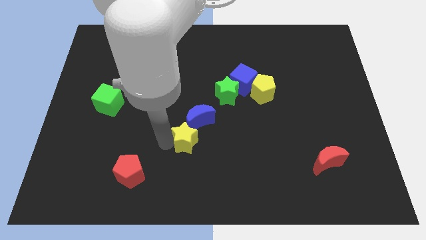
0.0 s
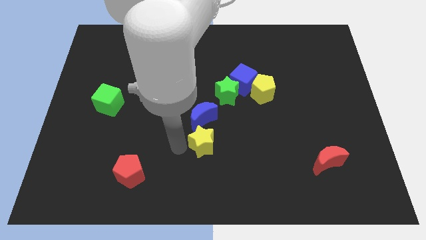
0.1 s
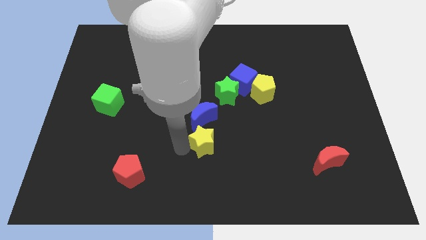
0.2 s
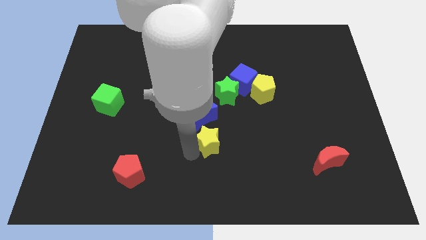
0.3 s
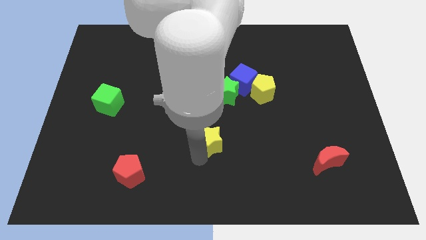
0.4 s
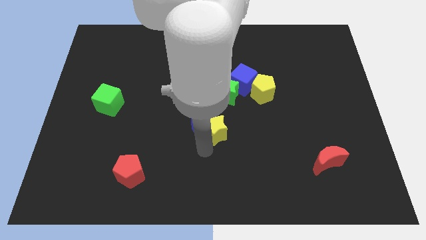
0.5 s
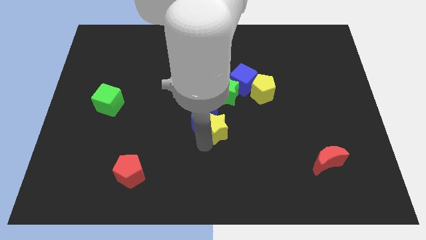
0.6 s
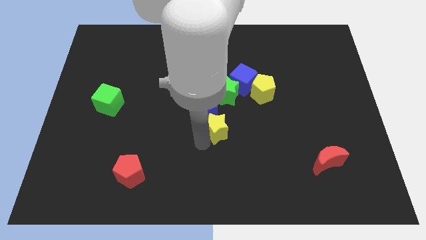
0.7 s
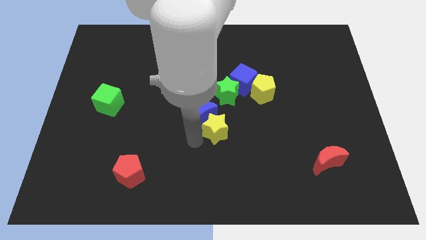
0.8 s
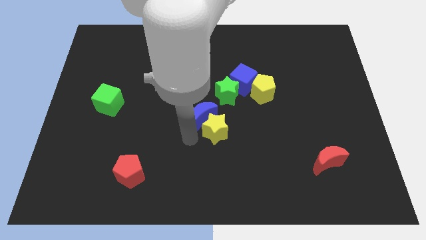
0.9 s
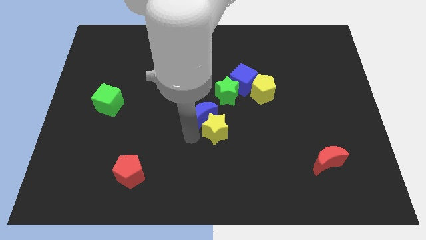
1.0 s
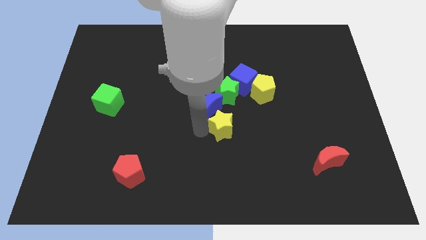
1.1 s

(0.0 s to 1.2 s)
move yellow star into blue moon

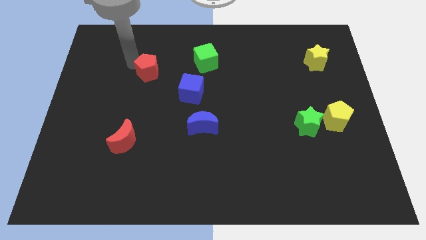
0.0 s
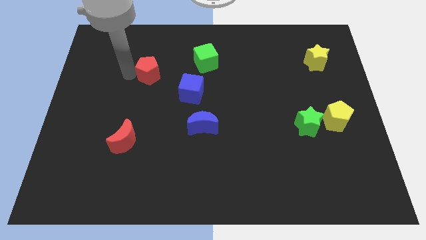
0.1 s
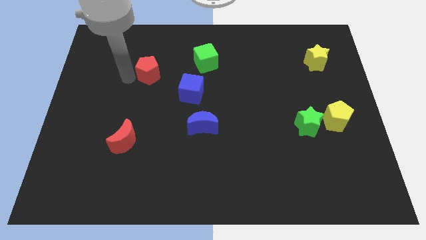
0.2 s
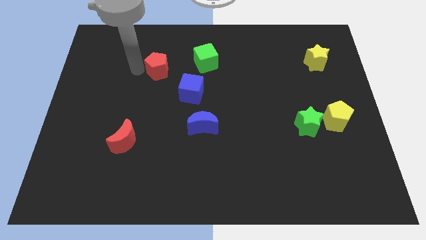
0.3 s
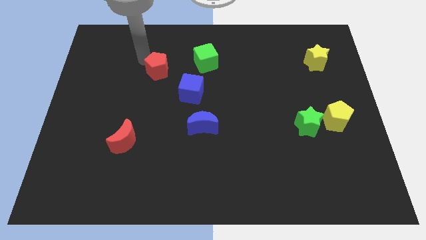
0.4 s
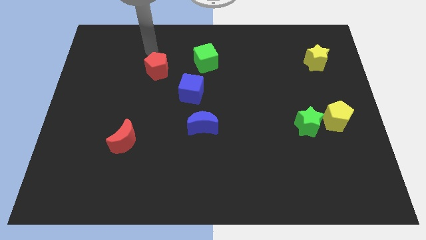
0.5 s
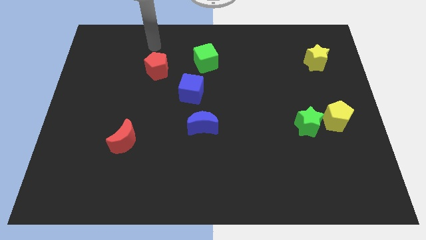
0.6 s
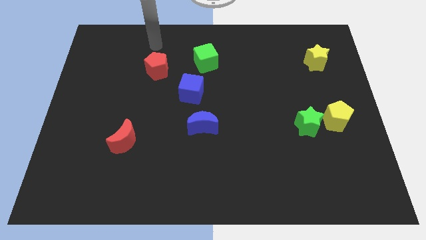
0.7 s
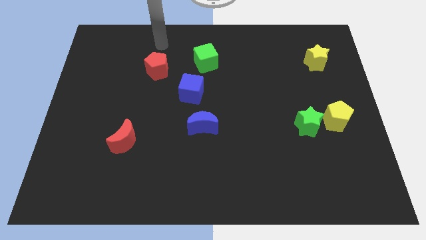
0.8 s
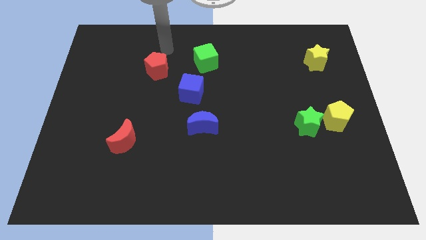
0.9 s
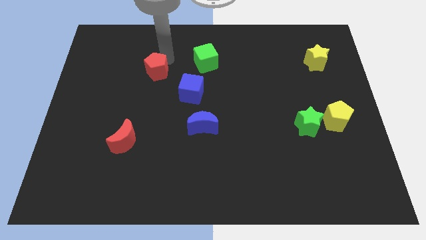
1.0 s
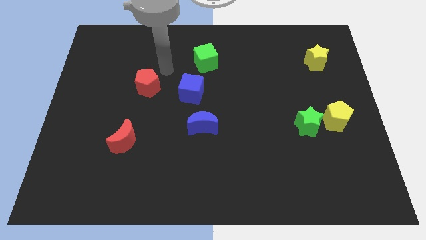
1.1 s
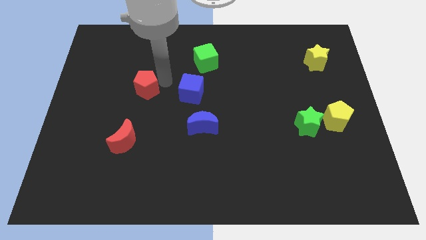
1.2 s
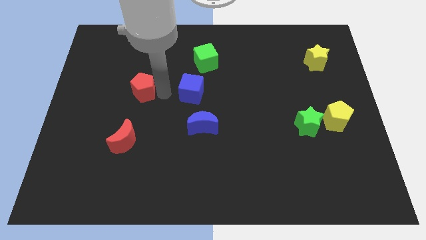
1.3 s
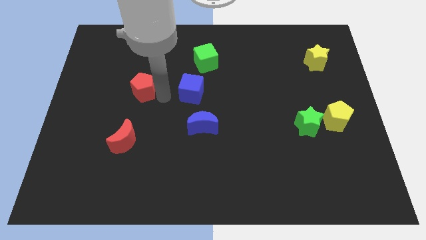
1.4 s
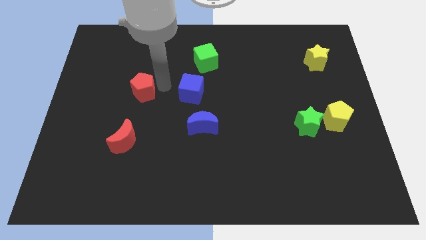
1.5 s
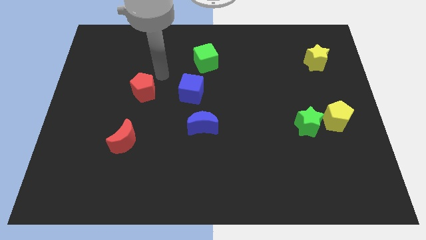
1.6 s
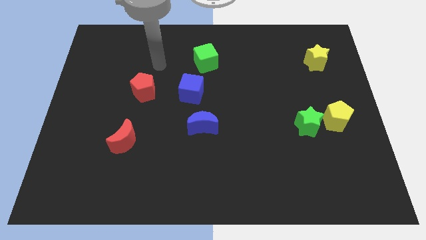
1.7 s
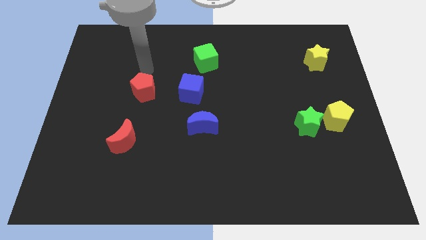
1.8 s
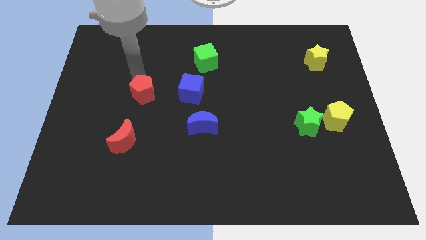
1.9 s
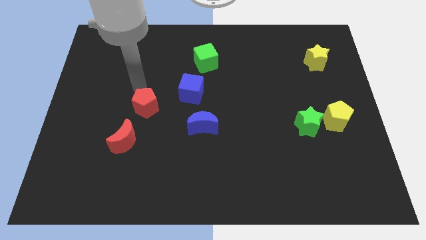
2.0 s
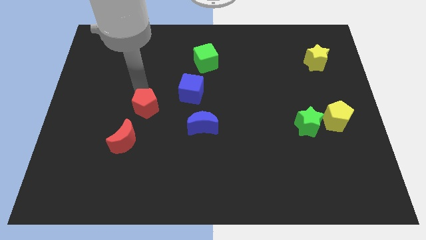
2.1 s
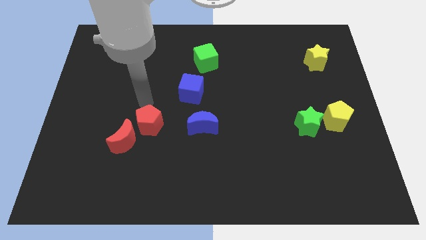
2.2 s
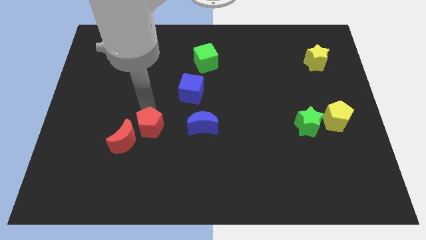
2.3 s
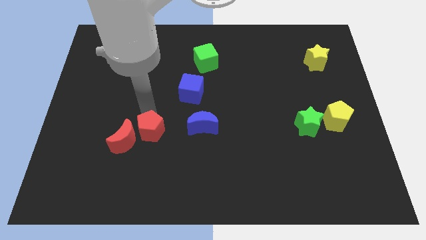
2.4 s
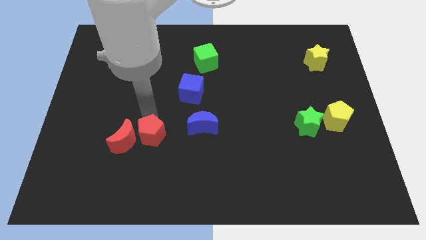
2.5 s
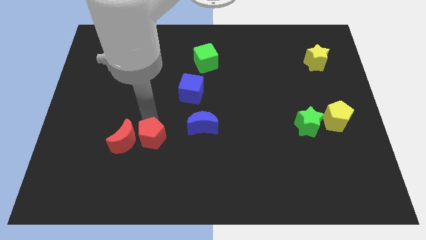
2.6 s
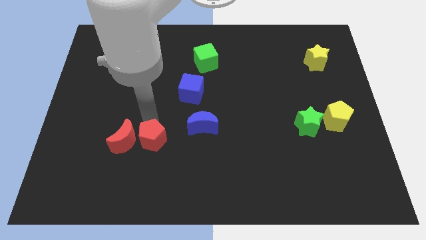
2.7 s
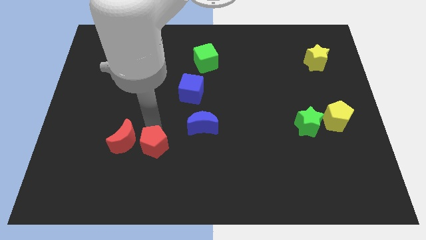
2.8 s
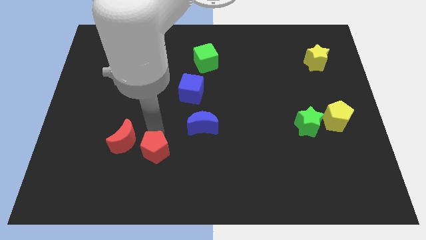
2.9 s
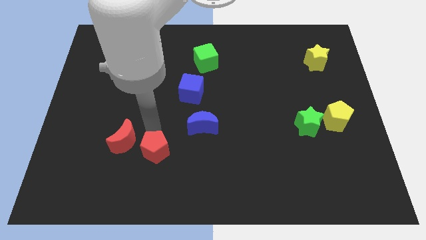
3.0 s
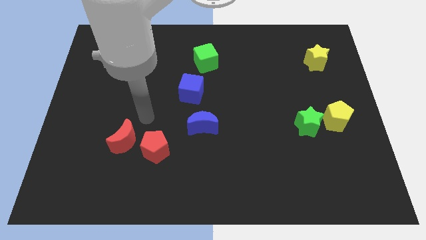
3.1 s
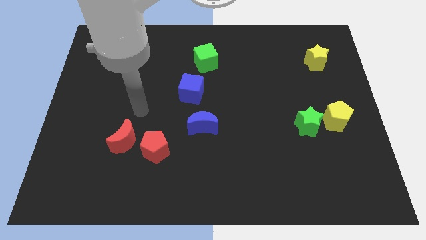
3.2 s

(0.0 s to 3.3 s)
move red pentagon to the bottom left

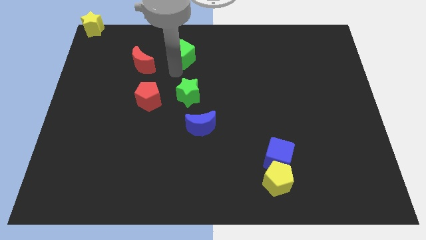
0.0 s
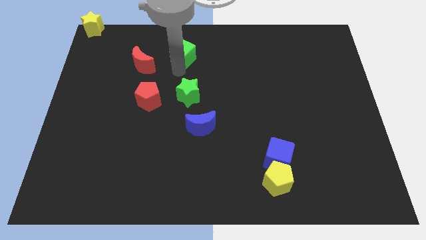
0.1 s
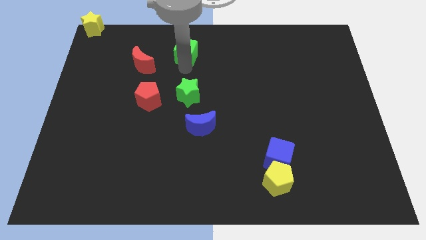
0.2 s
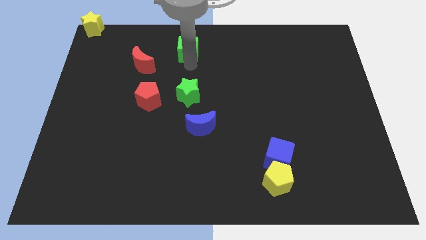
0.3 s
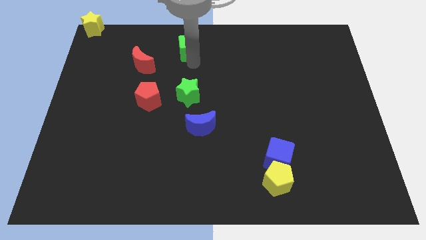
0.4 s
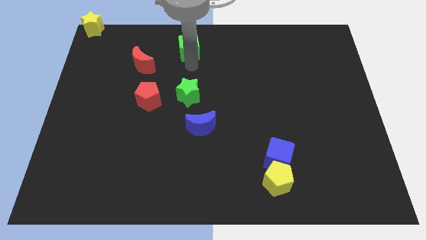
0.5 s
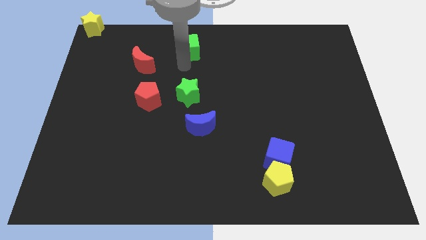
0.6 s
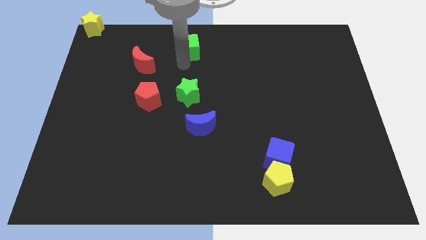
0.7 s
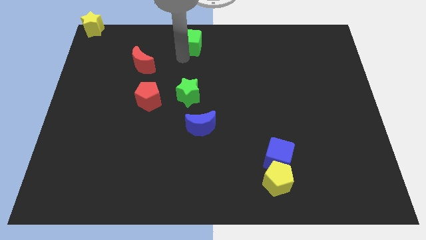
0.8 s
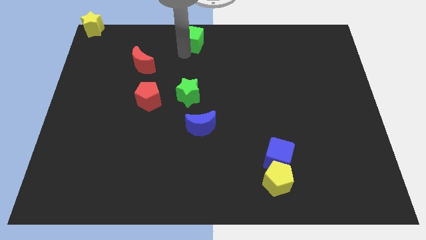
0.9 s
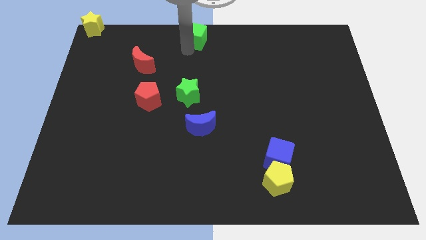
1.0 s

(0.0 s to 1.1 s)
push green cube towards top center

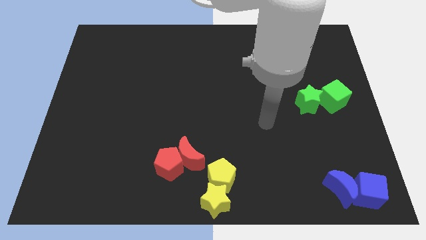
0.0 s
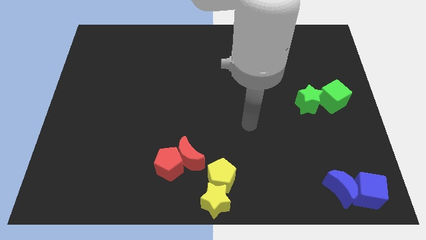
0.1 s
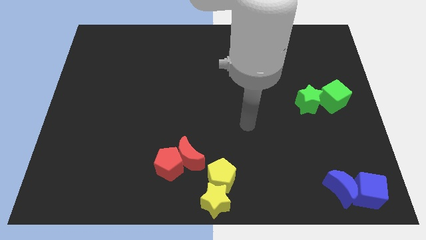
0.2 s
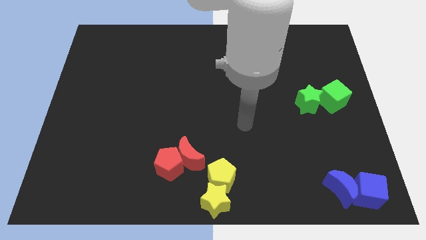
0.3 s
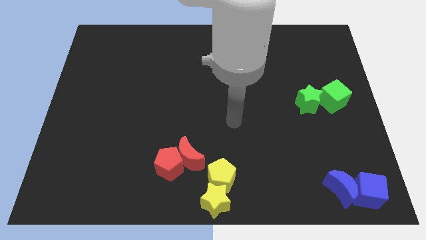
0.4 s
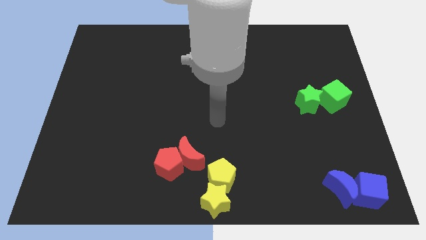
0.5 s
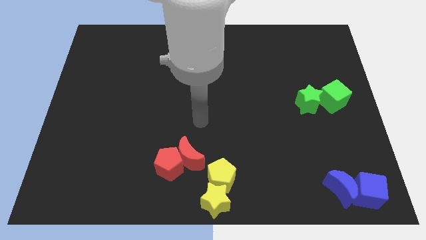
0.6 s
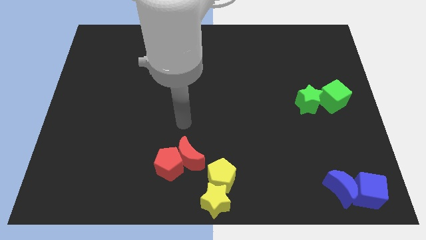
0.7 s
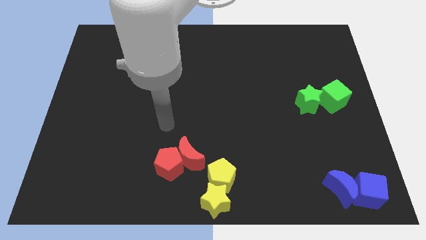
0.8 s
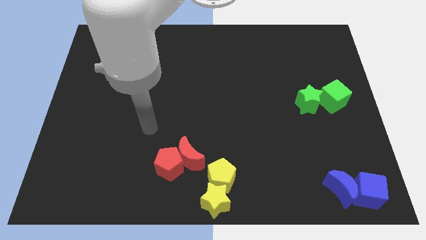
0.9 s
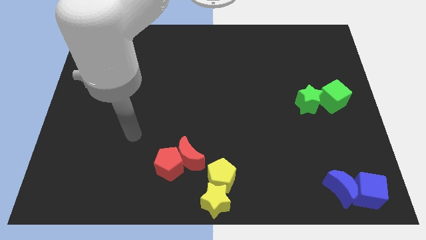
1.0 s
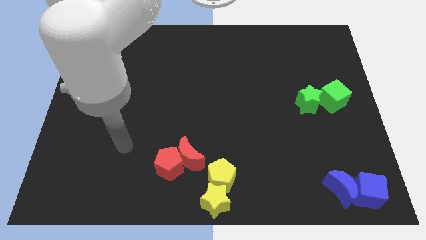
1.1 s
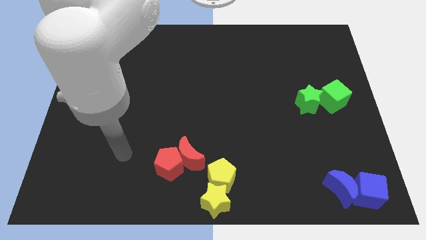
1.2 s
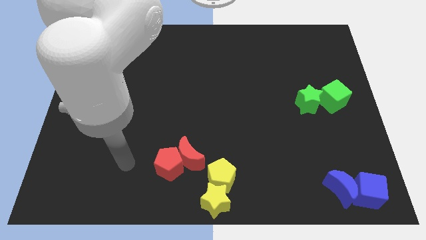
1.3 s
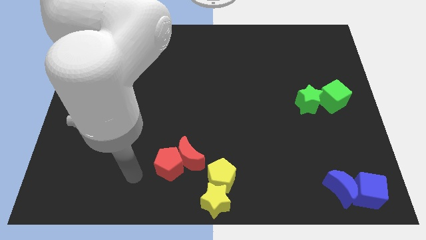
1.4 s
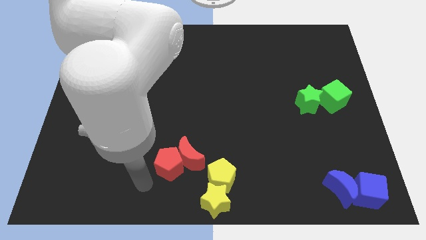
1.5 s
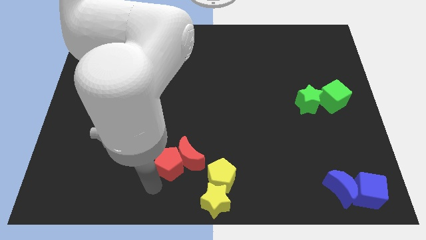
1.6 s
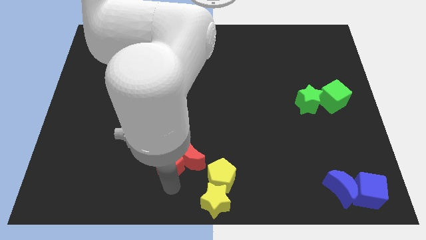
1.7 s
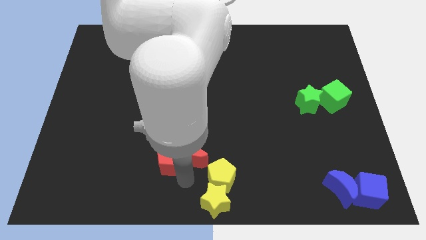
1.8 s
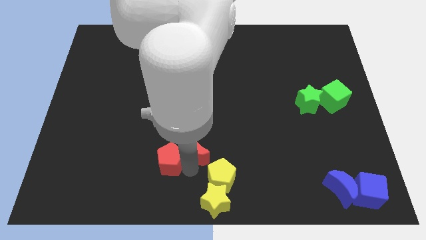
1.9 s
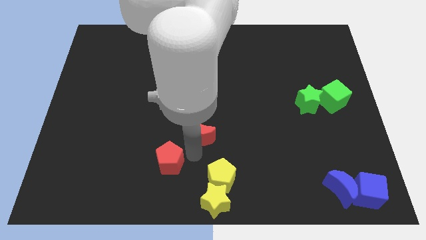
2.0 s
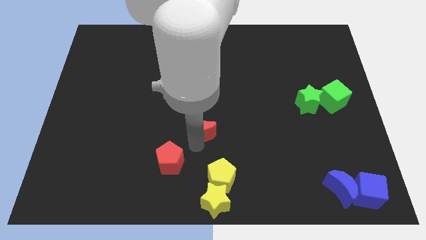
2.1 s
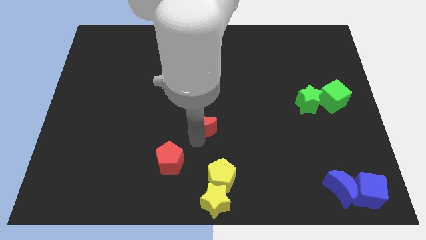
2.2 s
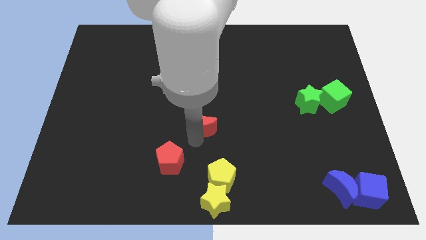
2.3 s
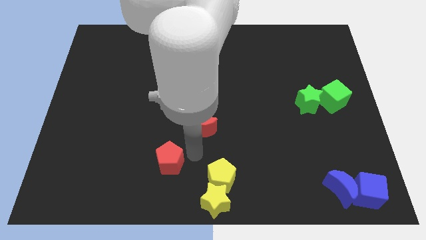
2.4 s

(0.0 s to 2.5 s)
separate the red moon from the red pentagon

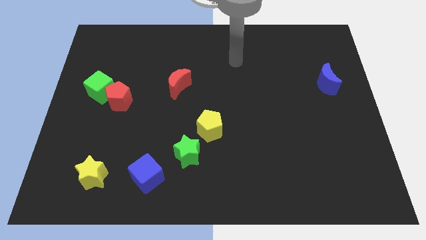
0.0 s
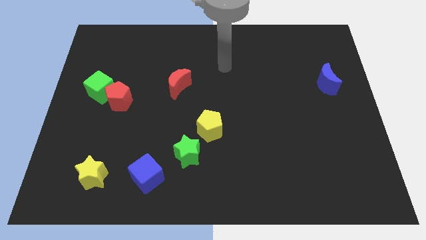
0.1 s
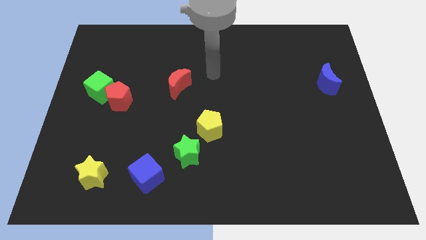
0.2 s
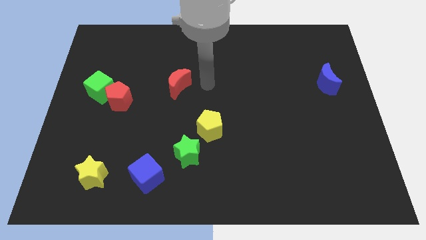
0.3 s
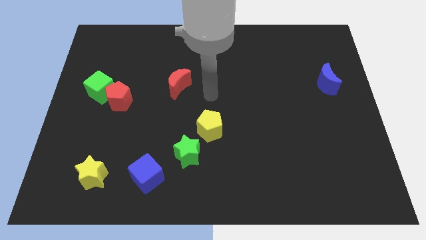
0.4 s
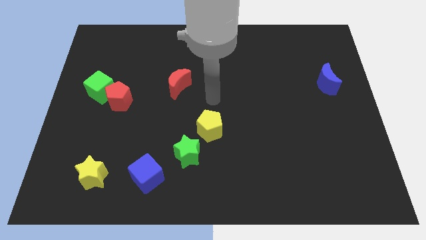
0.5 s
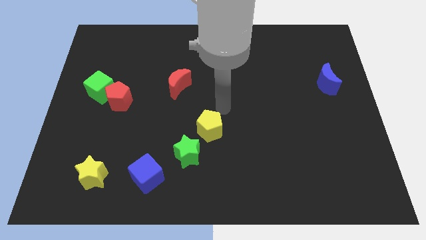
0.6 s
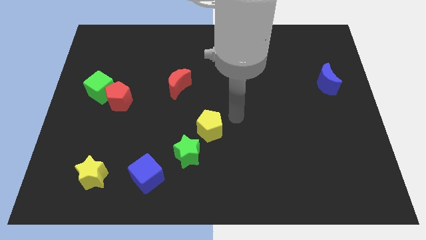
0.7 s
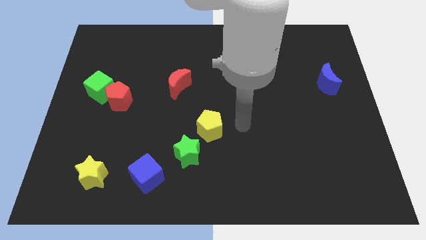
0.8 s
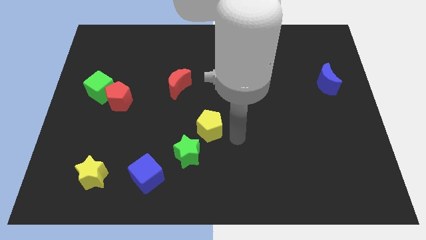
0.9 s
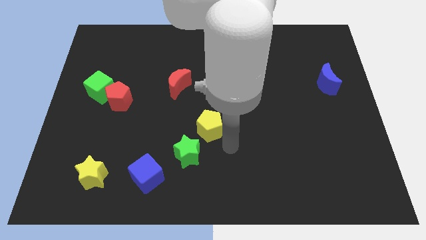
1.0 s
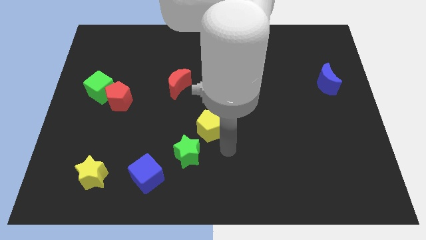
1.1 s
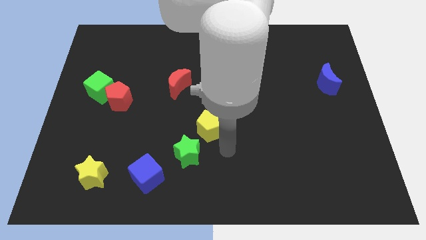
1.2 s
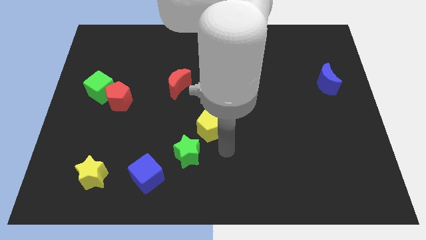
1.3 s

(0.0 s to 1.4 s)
move the arm to the bottom of yellow pentagon
